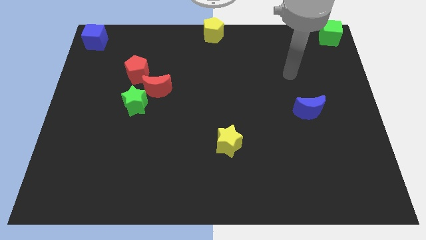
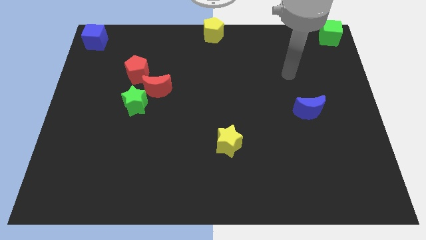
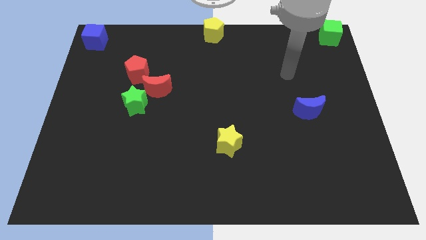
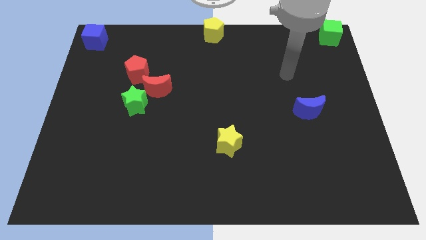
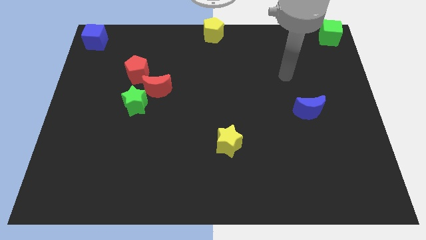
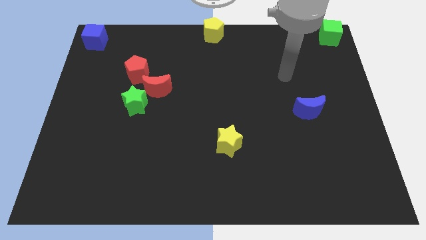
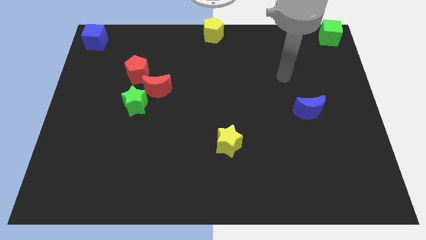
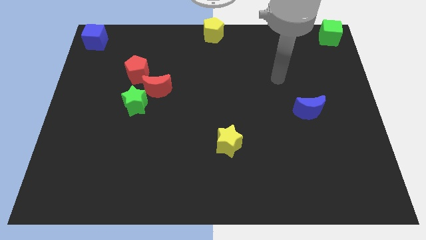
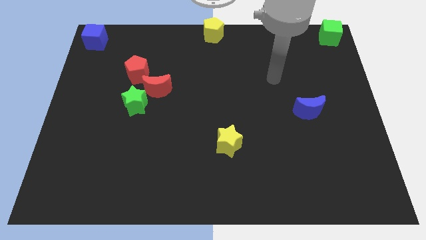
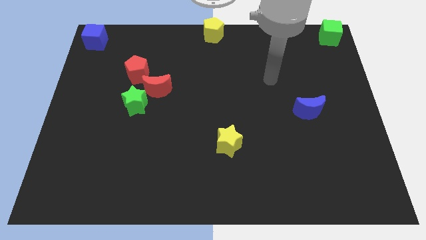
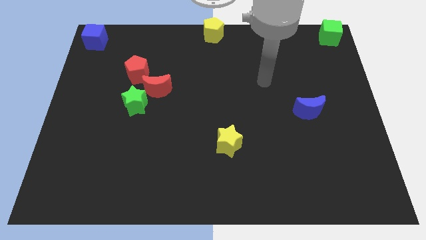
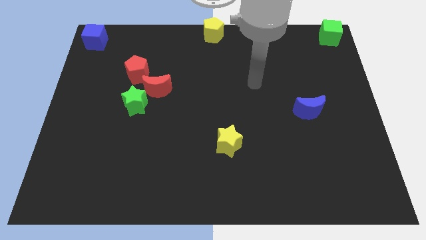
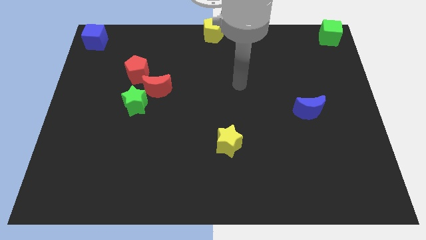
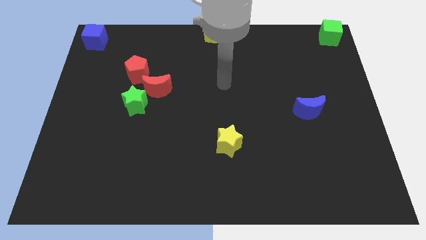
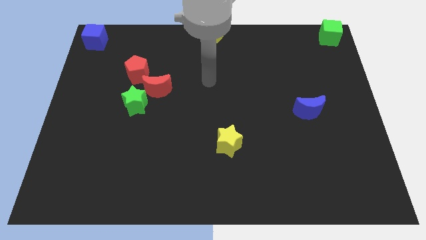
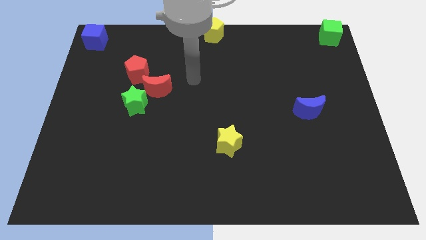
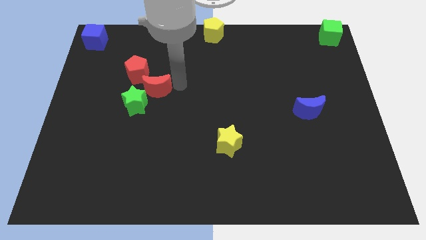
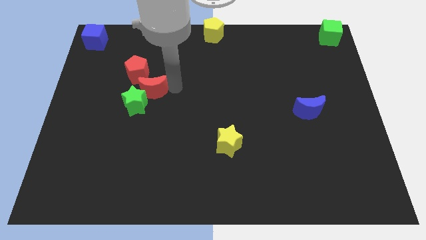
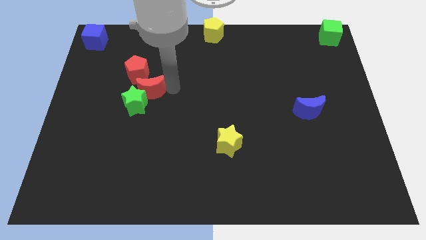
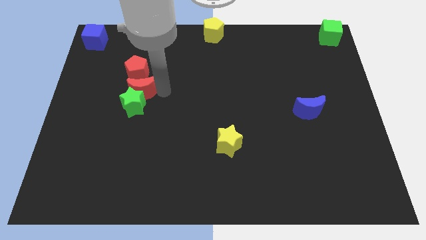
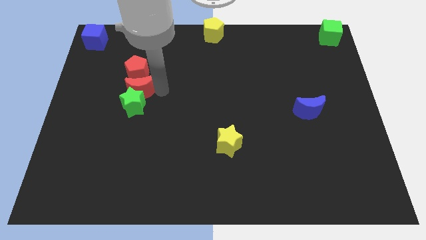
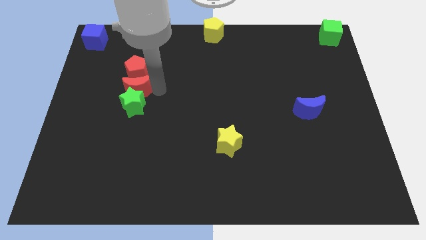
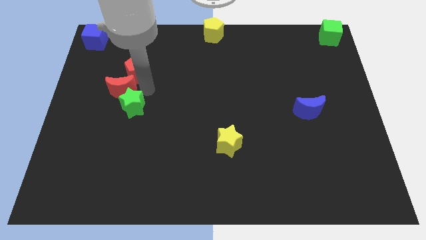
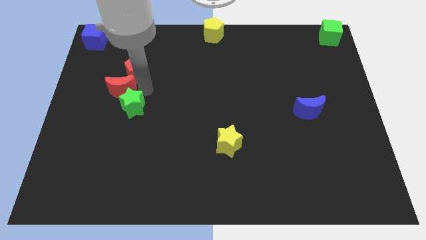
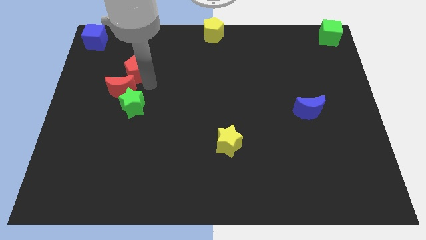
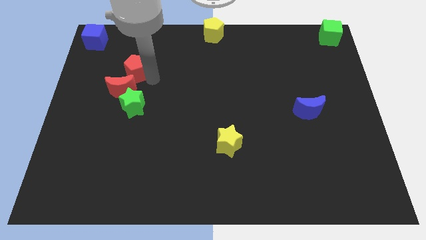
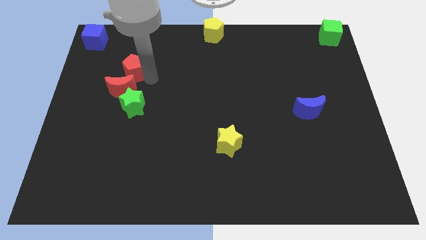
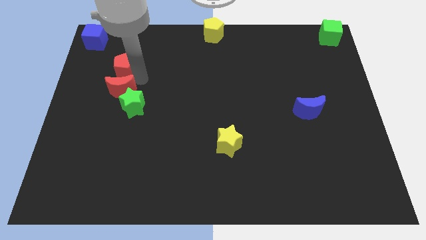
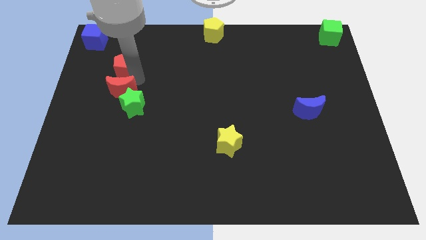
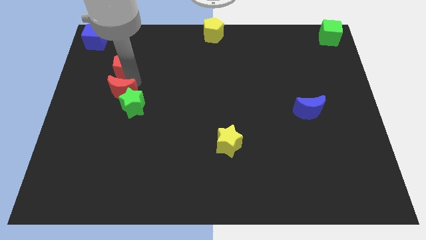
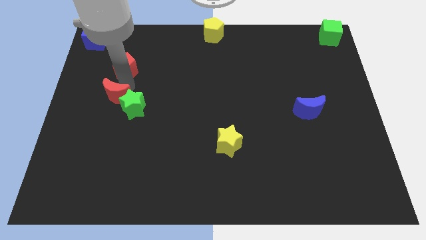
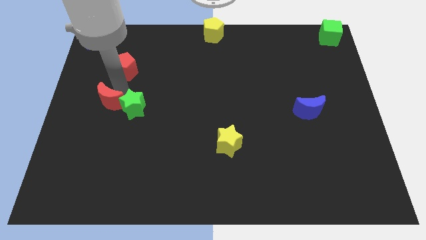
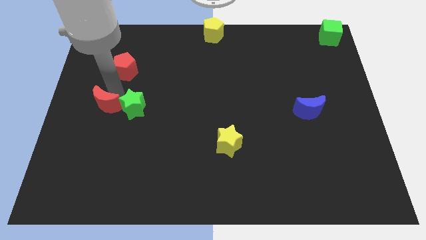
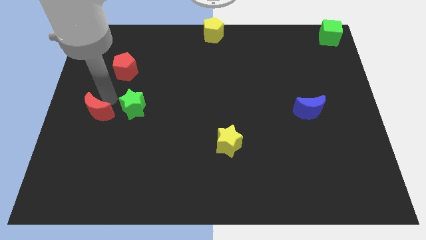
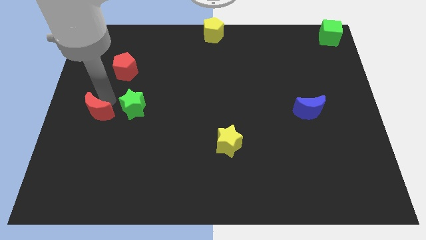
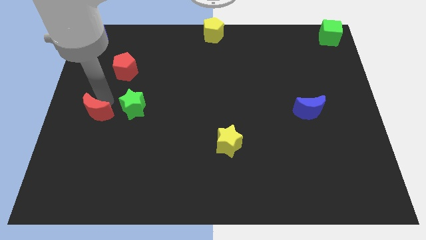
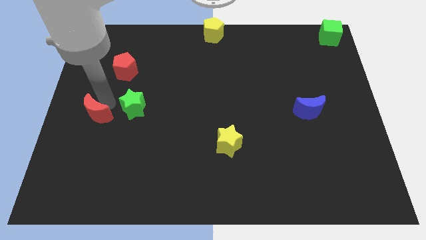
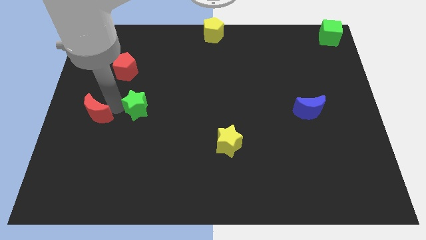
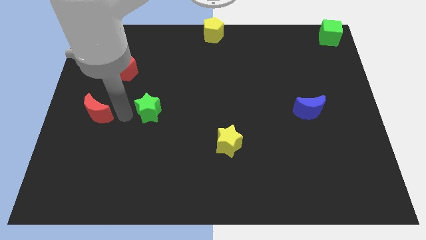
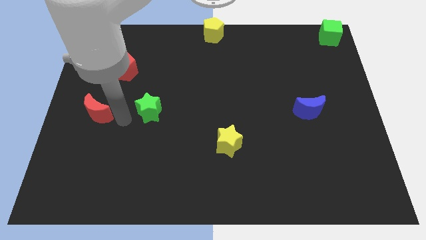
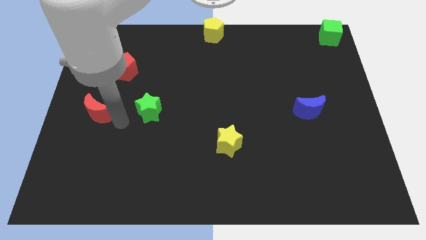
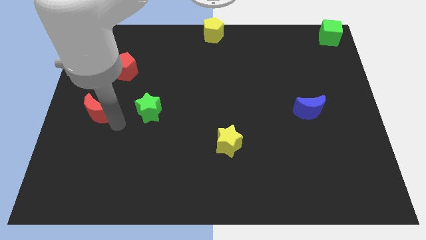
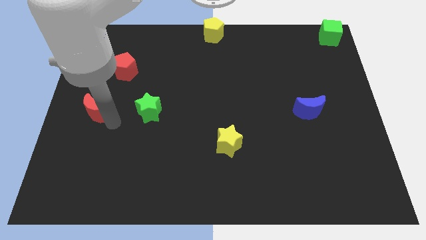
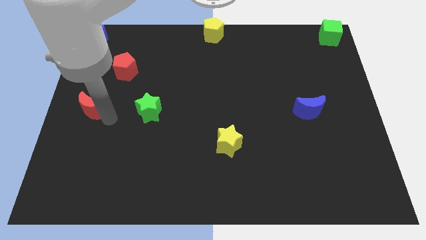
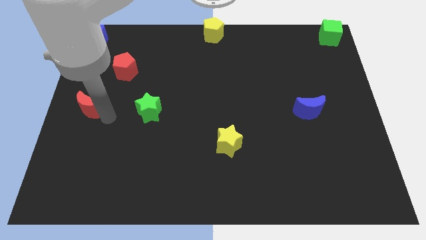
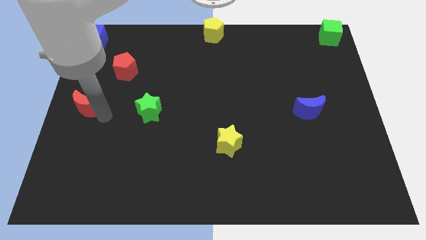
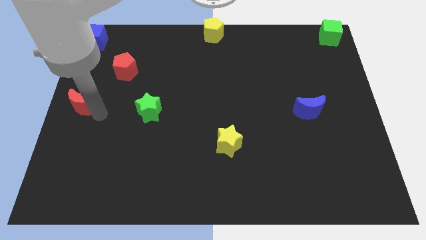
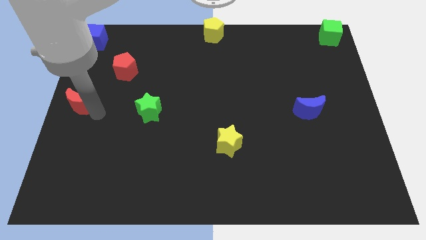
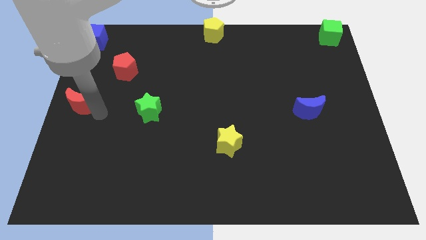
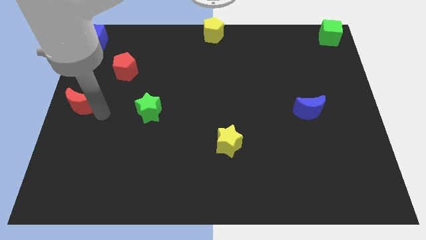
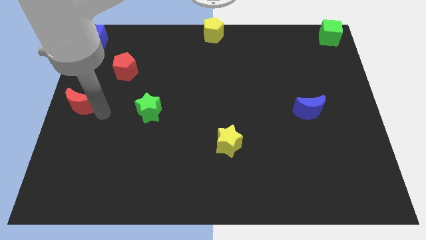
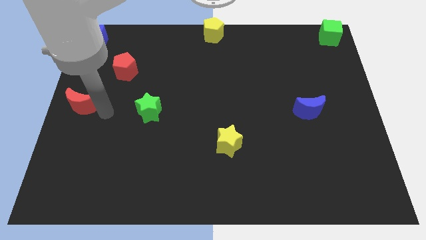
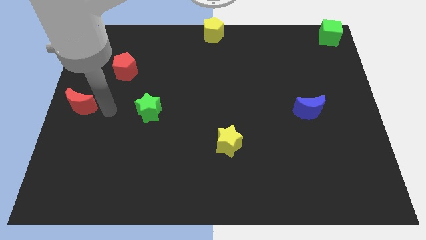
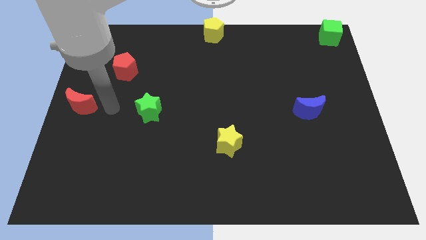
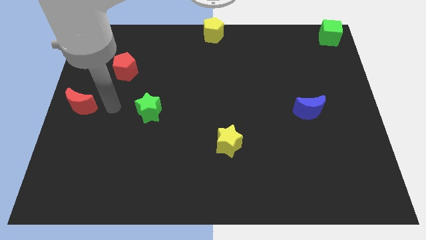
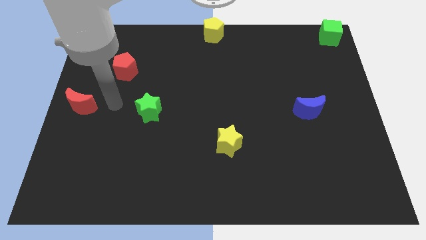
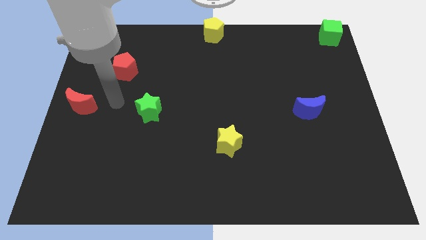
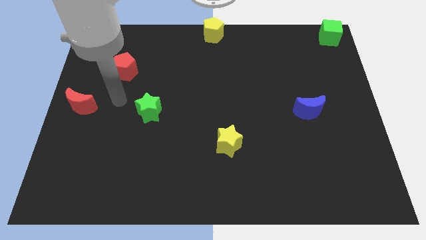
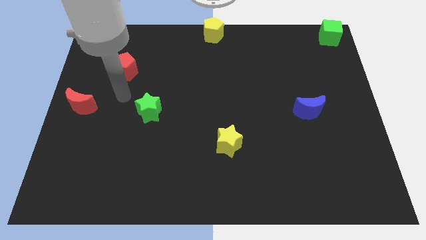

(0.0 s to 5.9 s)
push the red crescent to the left center of the board

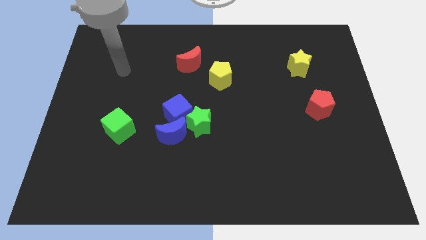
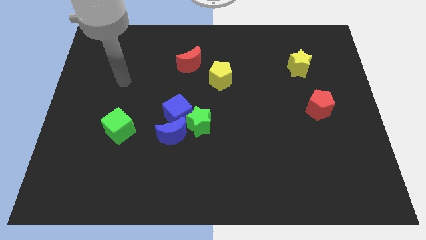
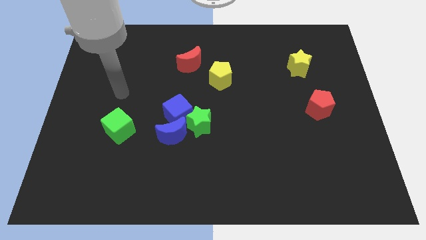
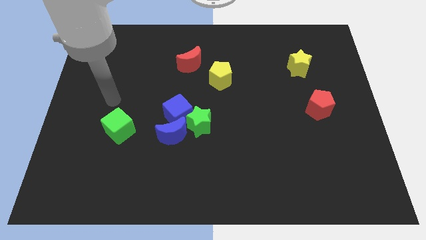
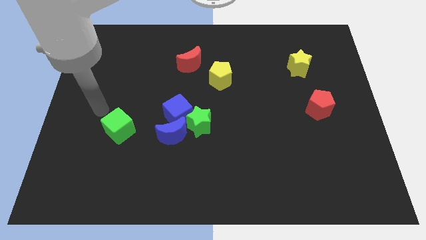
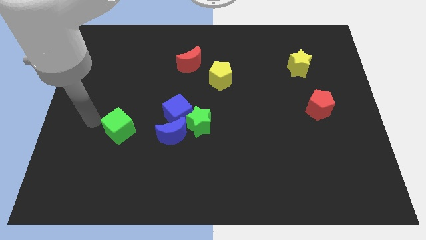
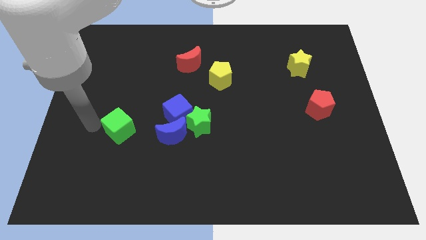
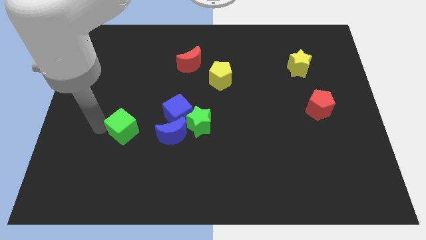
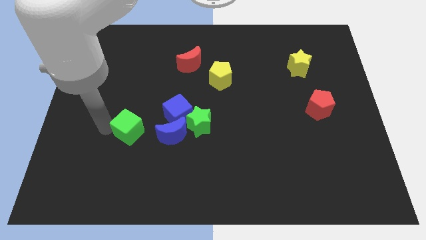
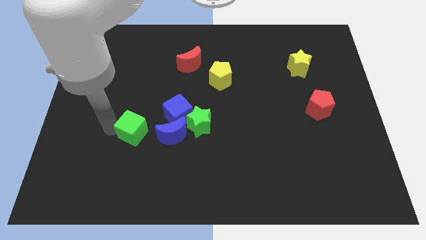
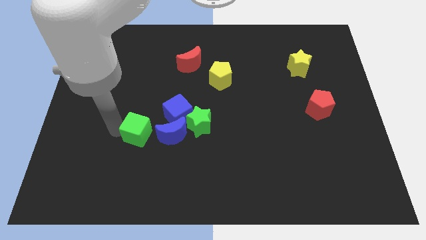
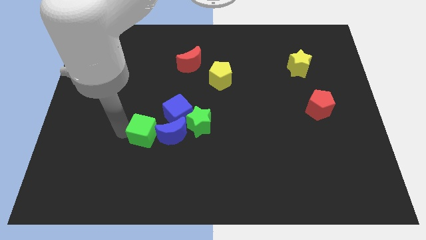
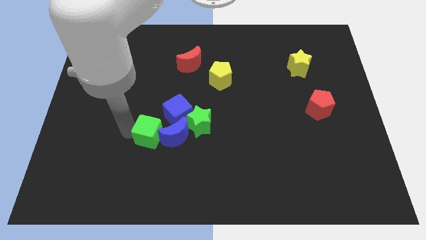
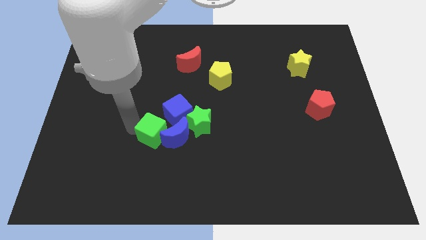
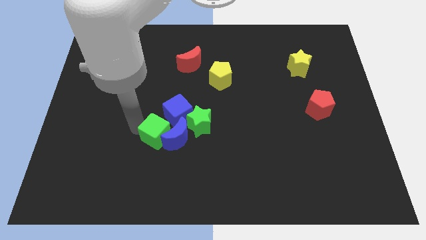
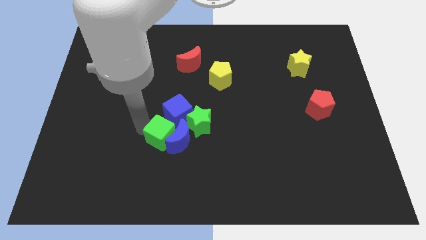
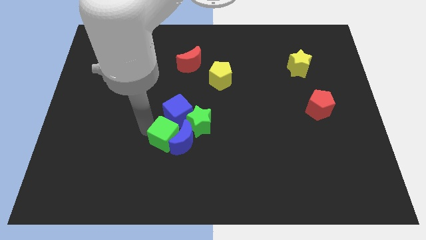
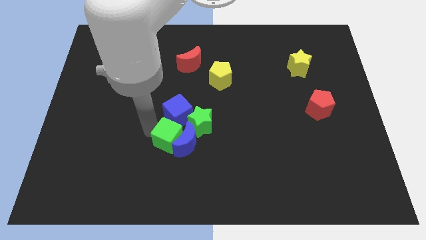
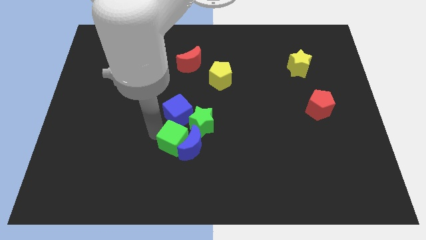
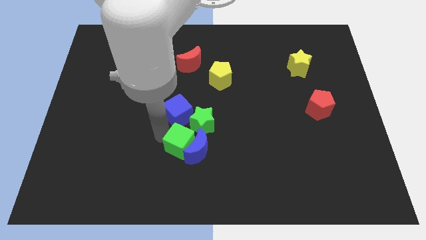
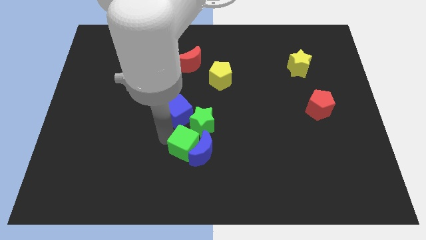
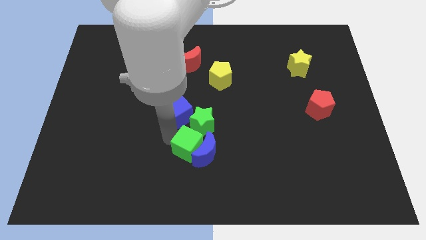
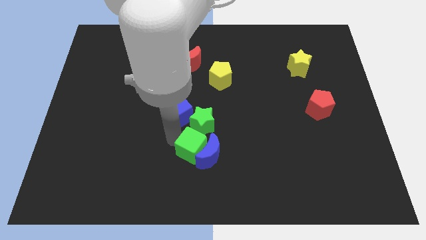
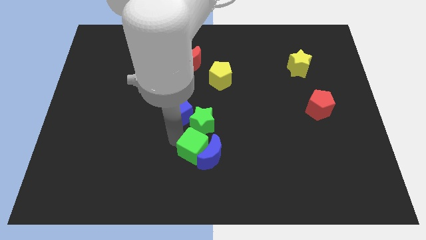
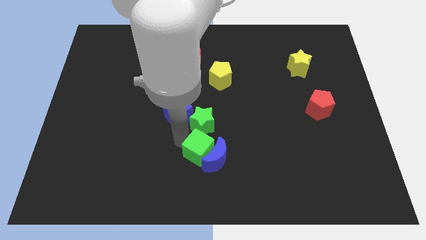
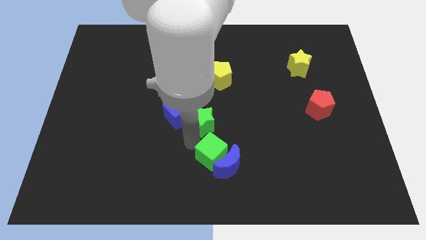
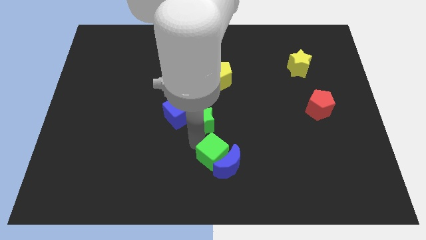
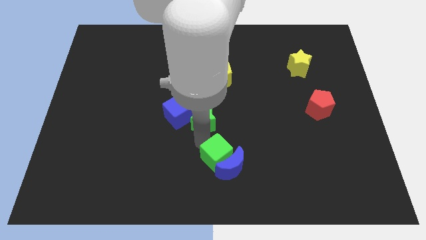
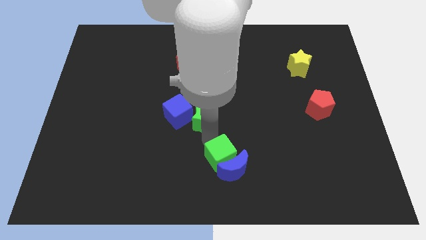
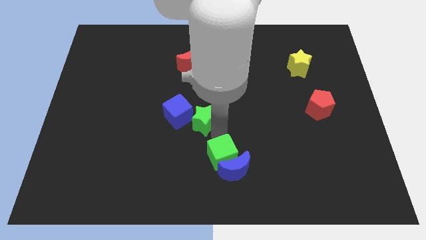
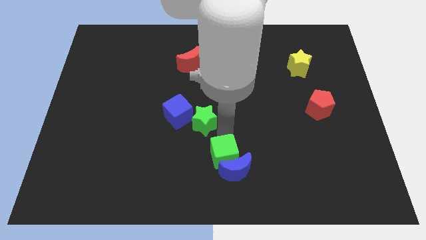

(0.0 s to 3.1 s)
slide green cube into blue moon
